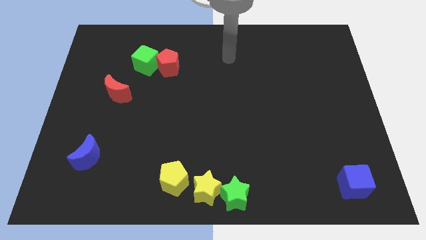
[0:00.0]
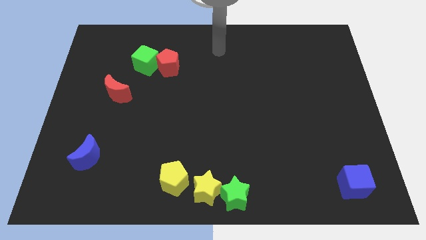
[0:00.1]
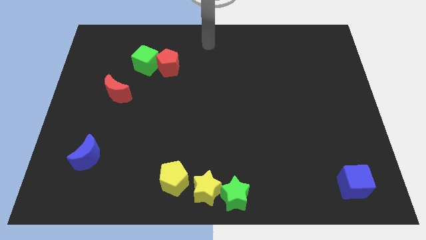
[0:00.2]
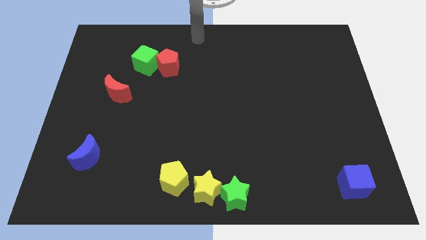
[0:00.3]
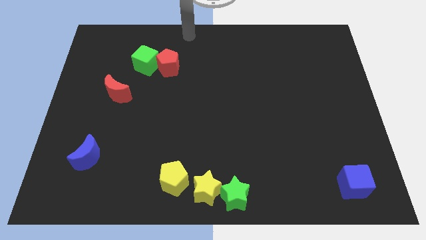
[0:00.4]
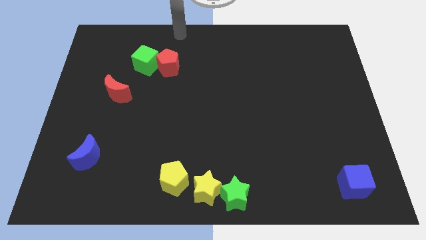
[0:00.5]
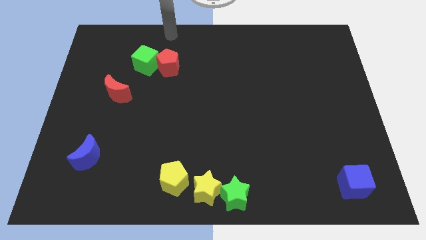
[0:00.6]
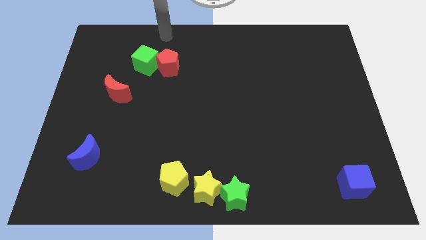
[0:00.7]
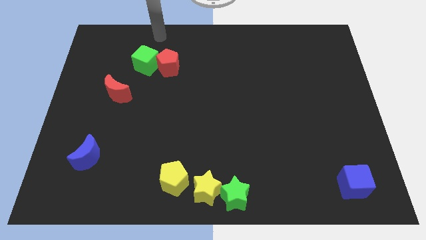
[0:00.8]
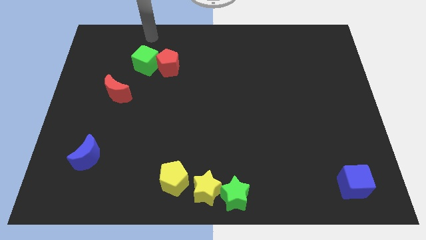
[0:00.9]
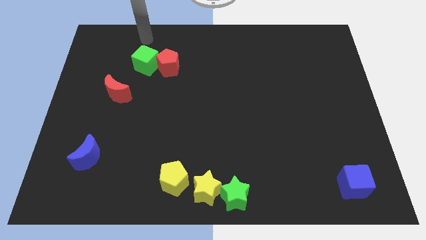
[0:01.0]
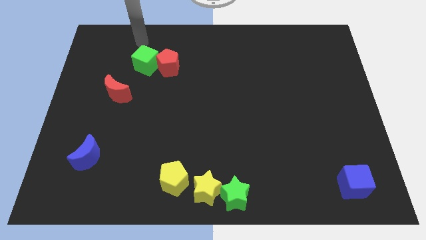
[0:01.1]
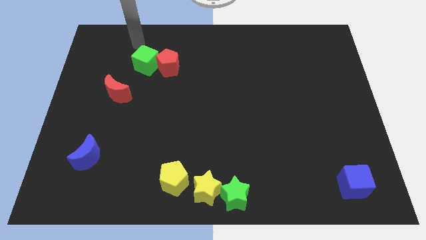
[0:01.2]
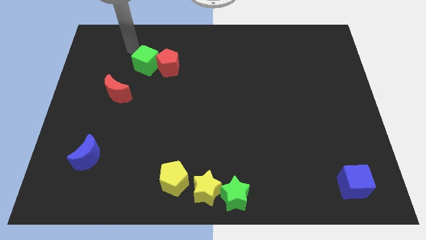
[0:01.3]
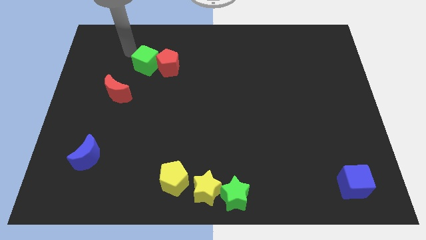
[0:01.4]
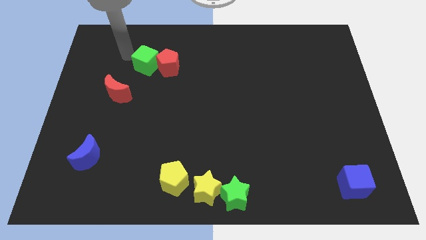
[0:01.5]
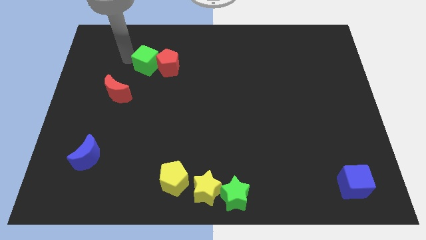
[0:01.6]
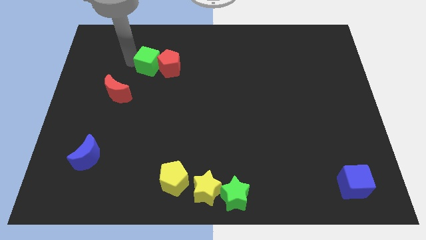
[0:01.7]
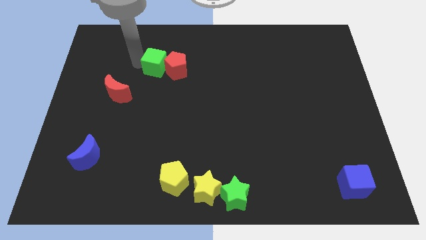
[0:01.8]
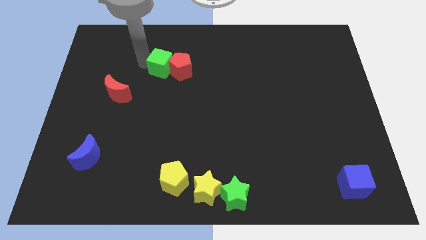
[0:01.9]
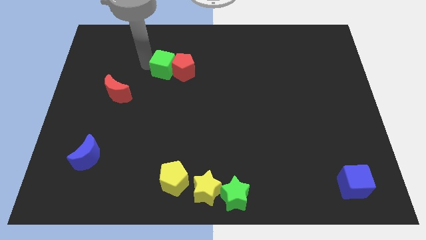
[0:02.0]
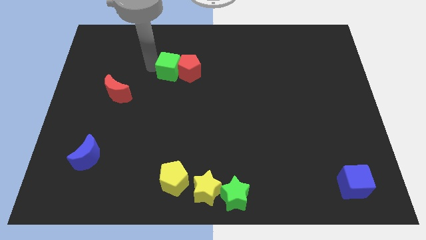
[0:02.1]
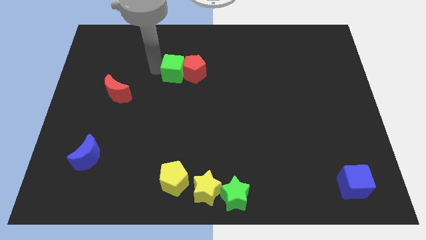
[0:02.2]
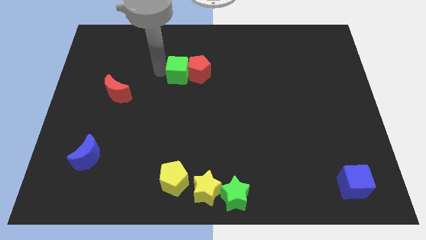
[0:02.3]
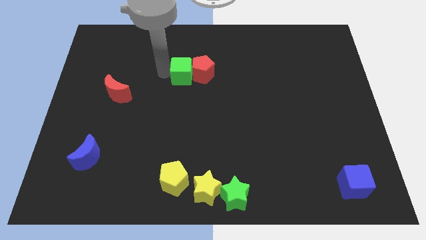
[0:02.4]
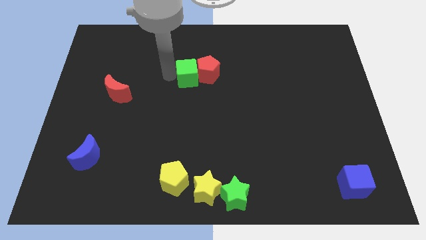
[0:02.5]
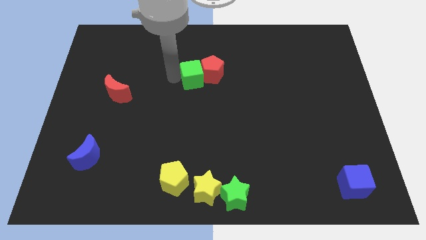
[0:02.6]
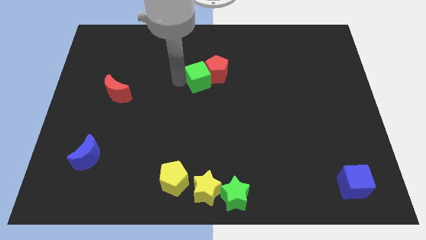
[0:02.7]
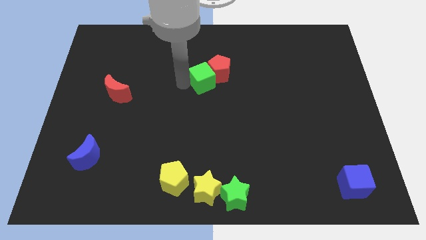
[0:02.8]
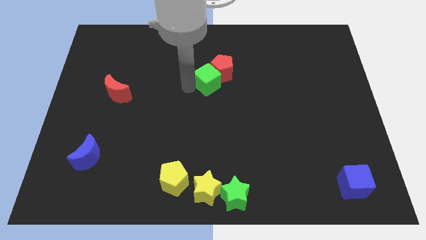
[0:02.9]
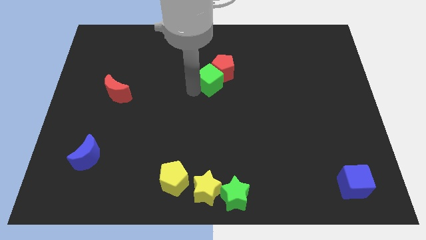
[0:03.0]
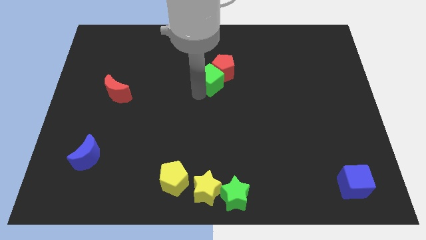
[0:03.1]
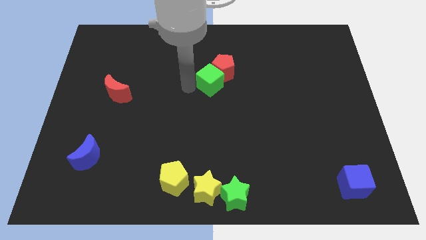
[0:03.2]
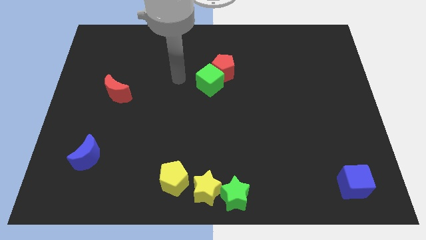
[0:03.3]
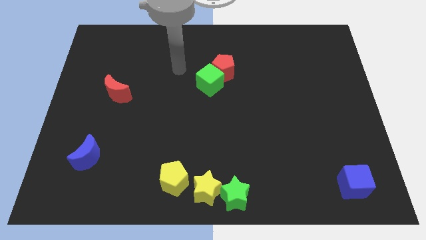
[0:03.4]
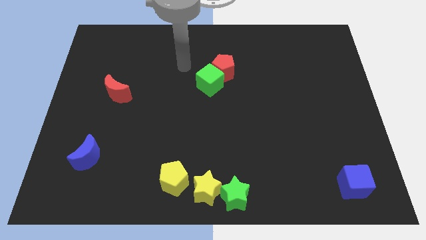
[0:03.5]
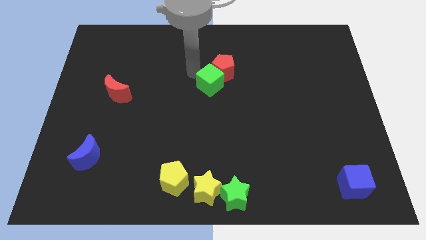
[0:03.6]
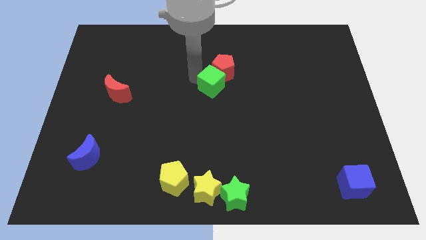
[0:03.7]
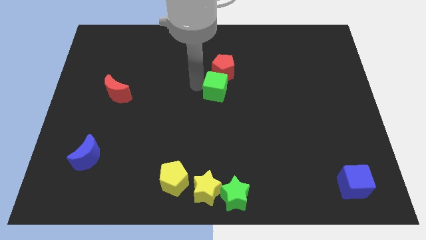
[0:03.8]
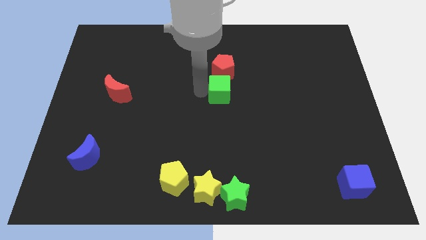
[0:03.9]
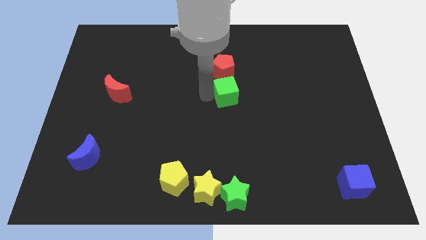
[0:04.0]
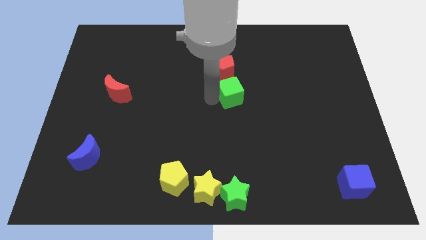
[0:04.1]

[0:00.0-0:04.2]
push green cube and red pentagon vertically above the green star

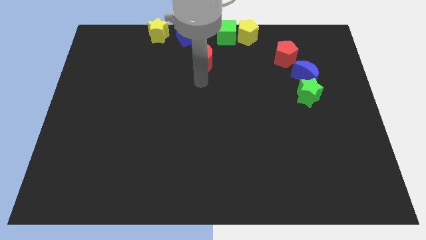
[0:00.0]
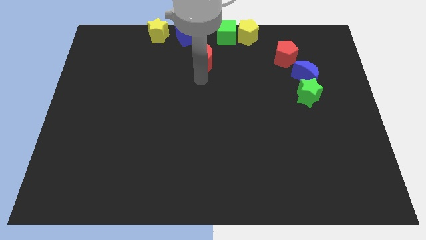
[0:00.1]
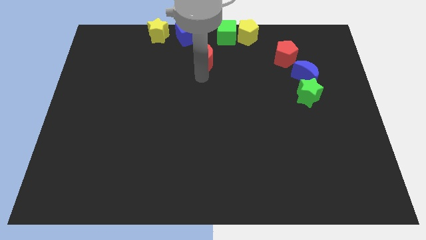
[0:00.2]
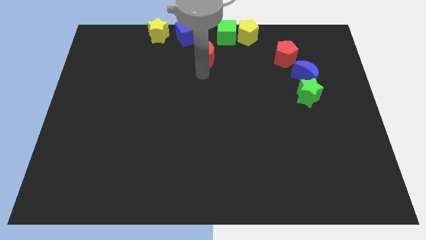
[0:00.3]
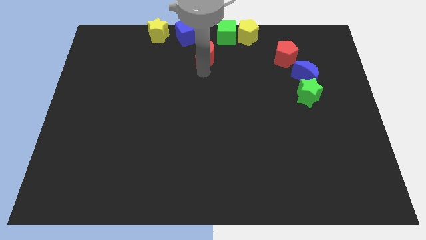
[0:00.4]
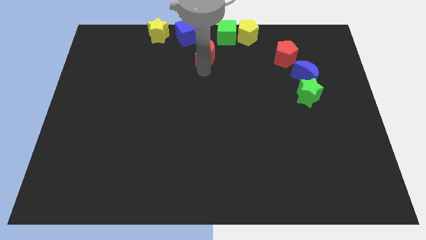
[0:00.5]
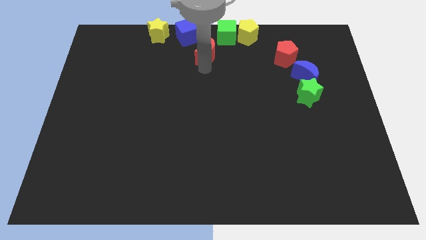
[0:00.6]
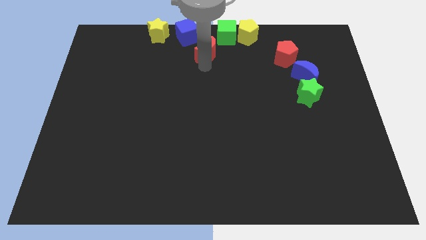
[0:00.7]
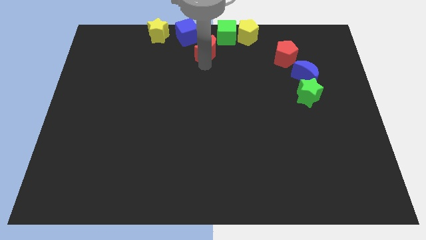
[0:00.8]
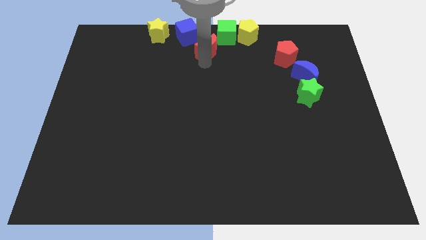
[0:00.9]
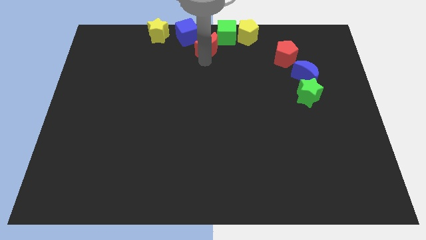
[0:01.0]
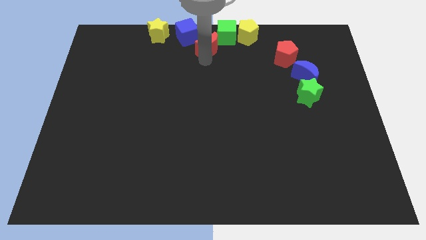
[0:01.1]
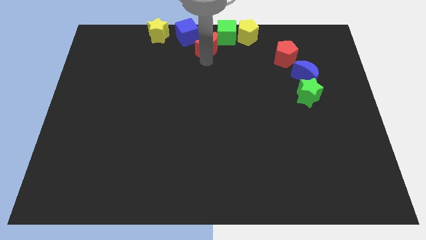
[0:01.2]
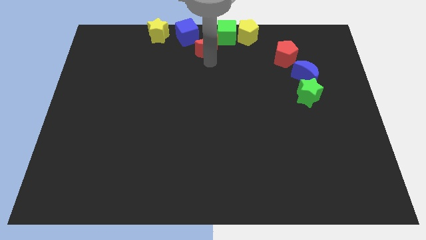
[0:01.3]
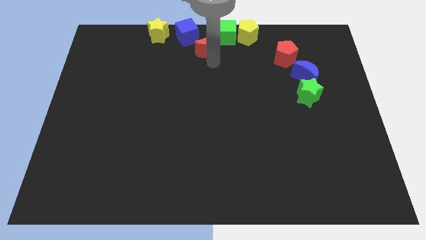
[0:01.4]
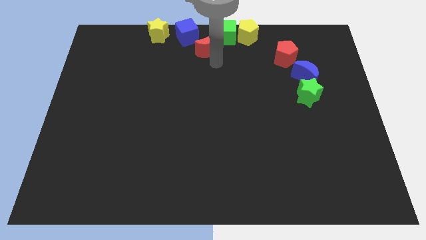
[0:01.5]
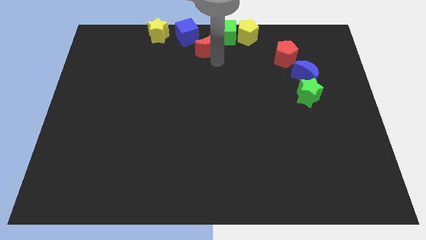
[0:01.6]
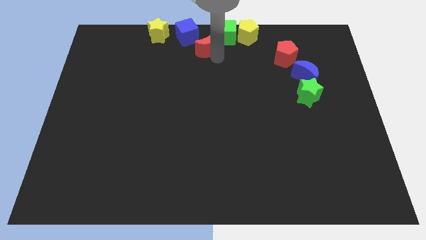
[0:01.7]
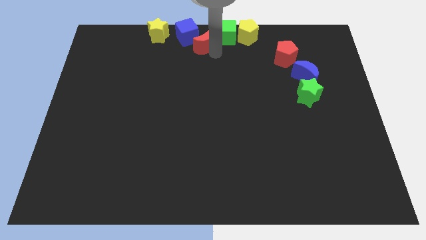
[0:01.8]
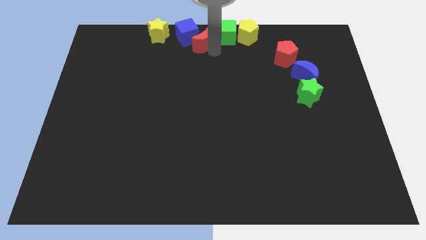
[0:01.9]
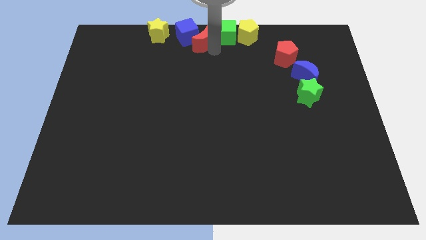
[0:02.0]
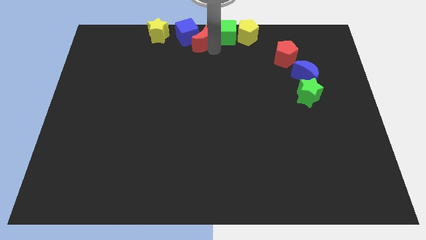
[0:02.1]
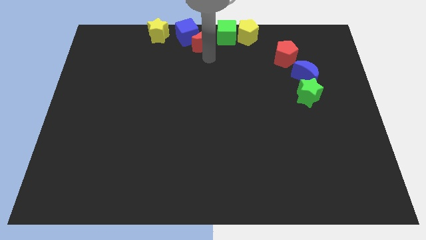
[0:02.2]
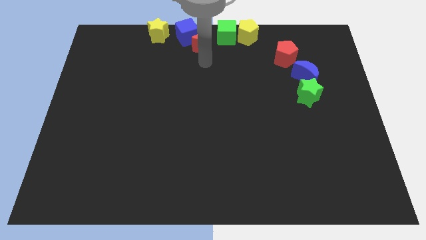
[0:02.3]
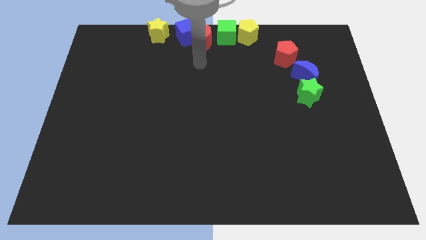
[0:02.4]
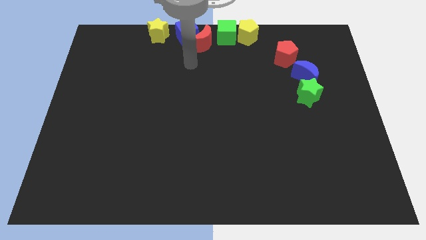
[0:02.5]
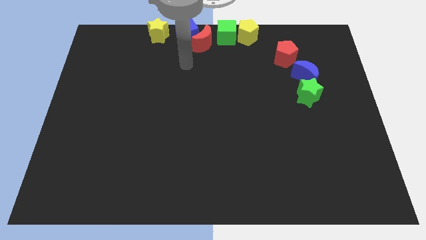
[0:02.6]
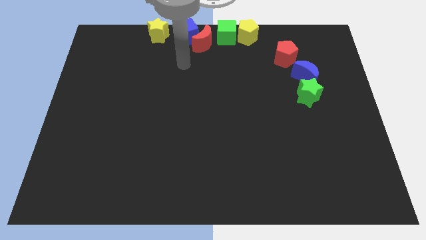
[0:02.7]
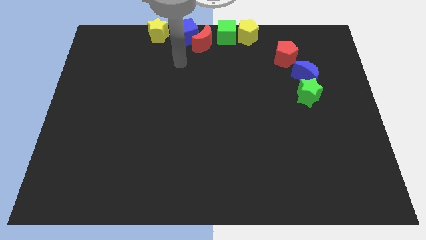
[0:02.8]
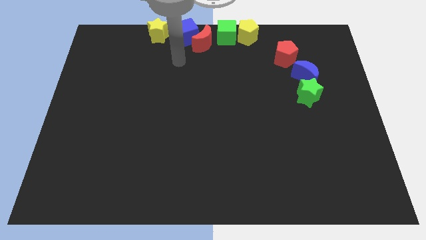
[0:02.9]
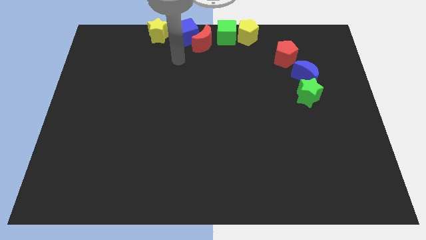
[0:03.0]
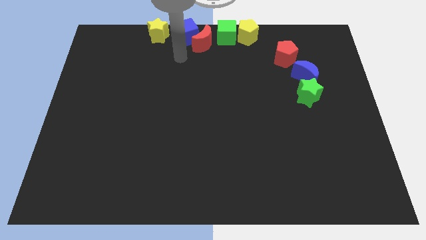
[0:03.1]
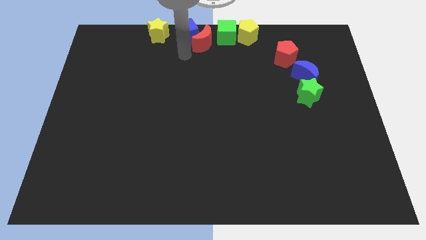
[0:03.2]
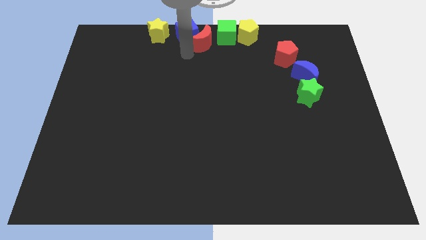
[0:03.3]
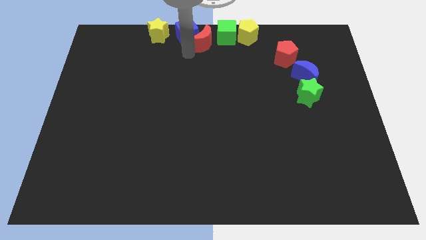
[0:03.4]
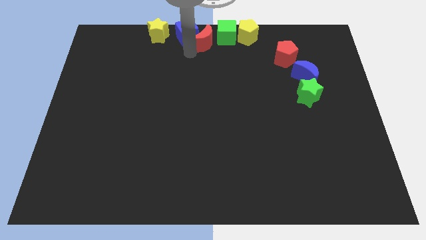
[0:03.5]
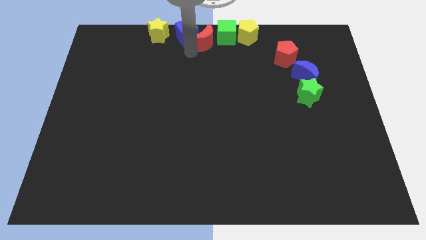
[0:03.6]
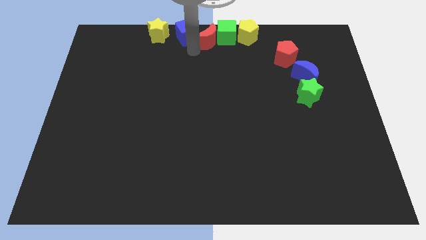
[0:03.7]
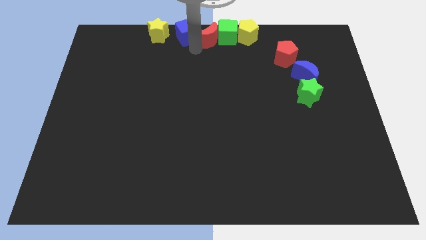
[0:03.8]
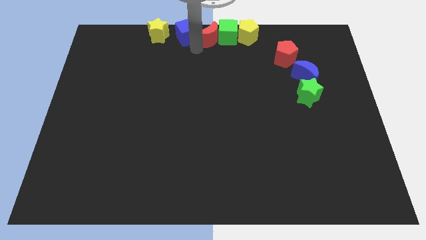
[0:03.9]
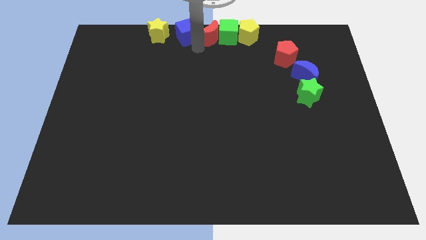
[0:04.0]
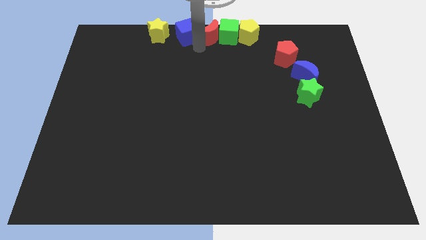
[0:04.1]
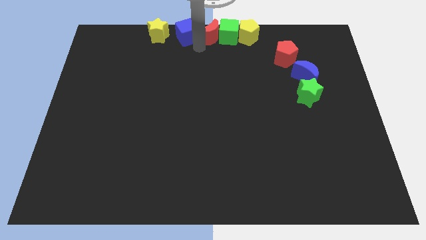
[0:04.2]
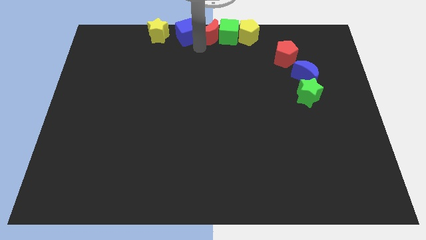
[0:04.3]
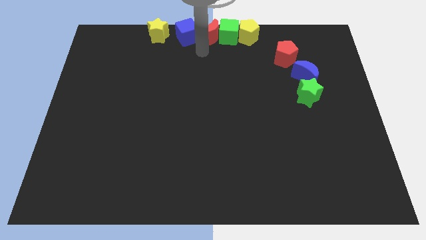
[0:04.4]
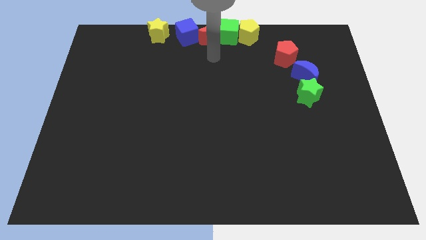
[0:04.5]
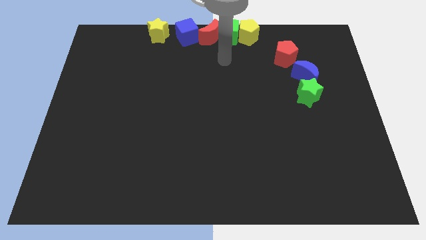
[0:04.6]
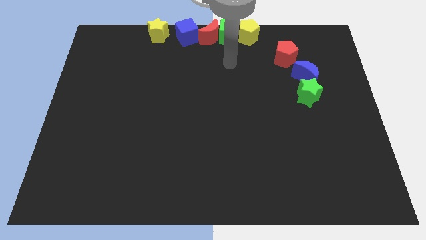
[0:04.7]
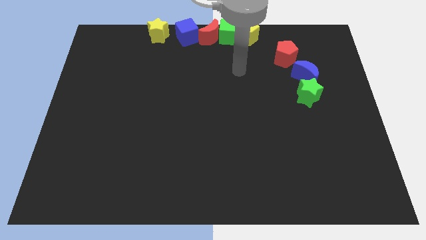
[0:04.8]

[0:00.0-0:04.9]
place the red moon in between blue cube and green cube
